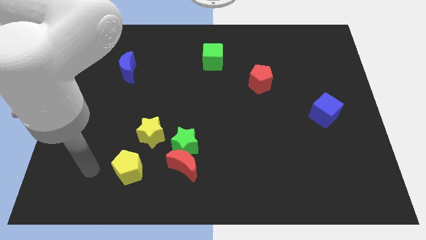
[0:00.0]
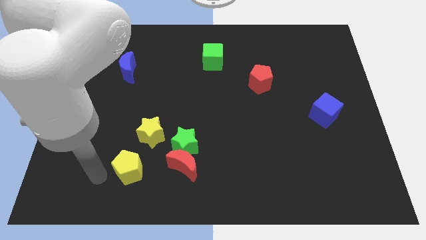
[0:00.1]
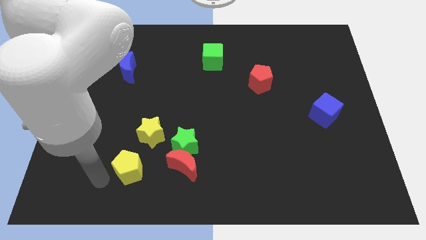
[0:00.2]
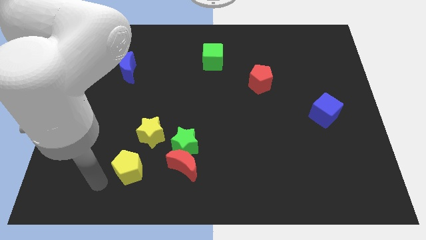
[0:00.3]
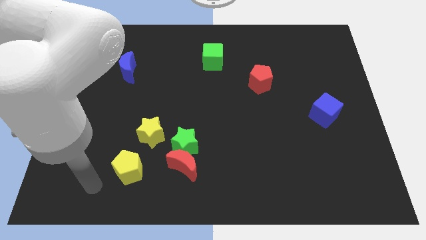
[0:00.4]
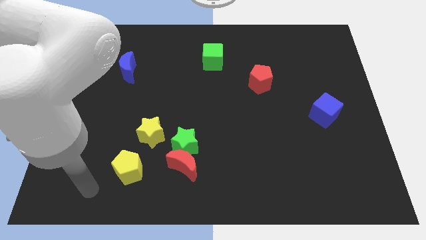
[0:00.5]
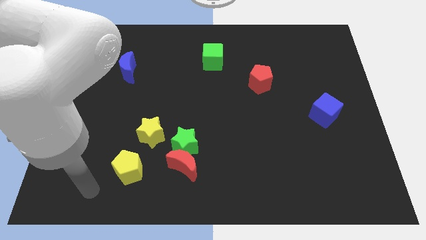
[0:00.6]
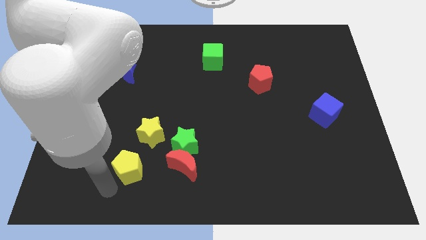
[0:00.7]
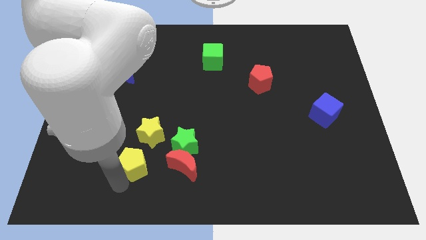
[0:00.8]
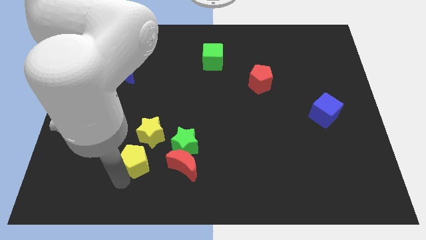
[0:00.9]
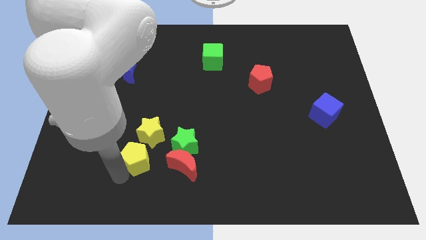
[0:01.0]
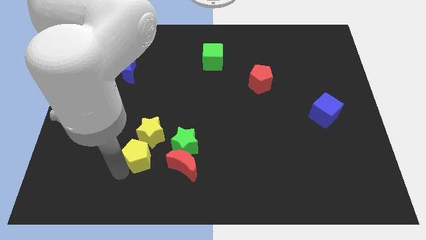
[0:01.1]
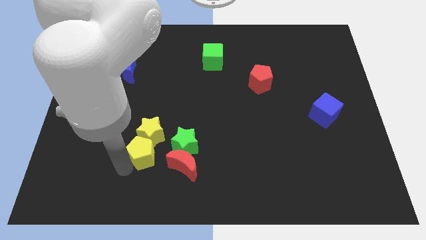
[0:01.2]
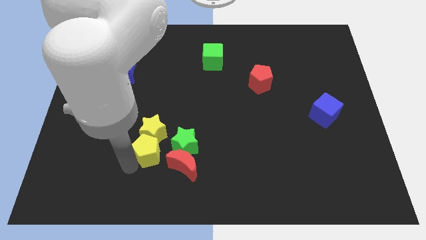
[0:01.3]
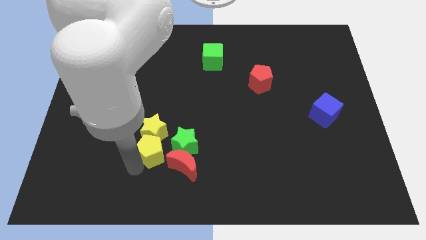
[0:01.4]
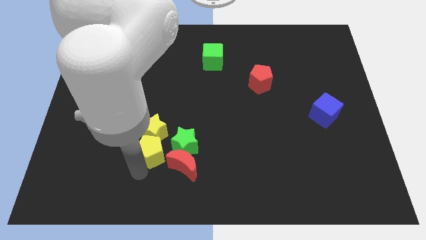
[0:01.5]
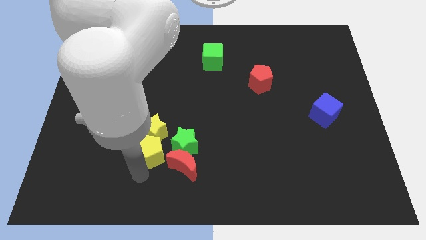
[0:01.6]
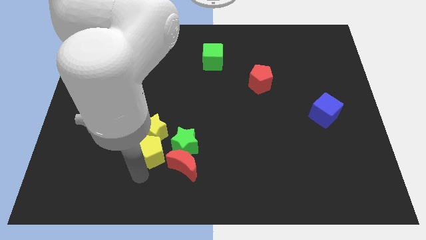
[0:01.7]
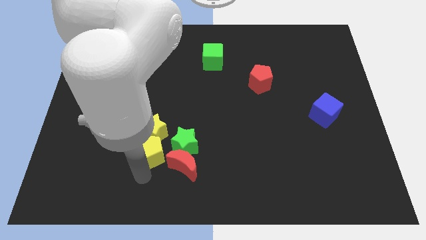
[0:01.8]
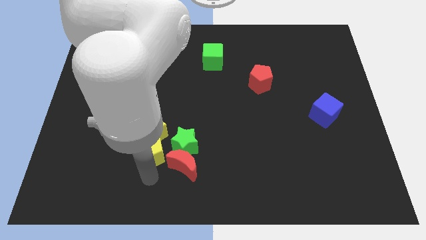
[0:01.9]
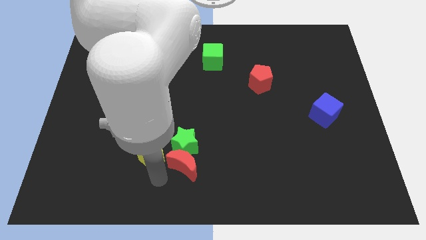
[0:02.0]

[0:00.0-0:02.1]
push yellow pentagon into yellow star

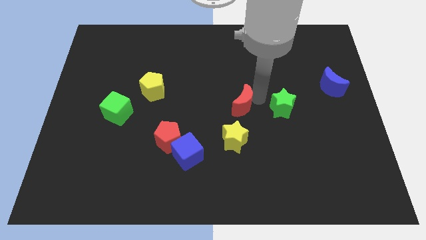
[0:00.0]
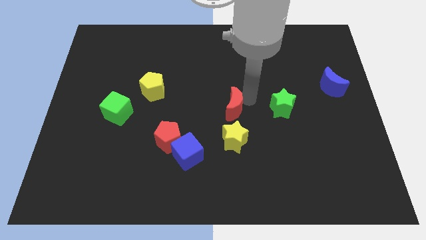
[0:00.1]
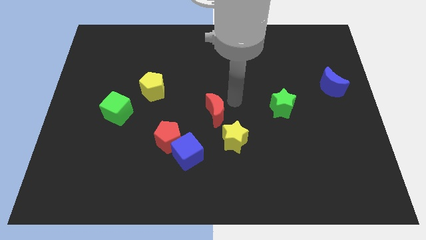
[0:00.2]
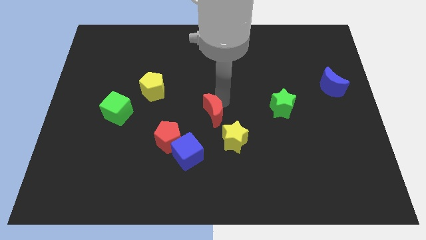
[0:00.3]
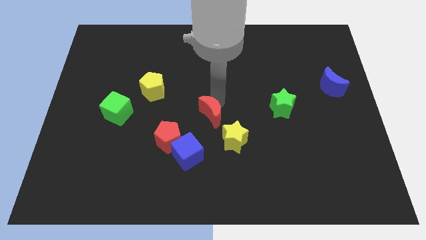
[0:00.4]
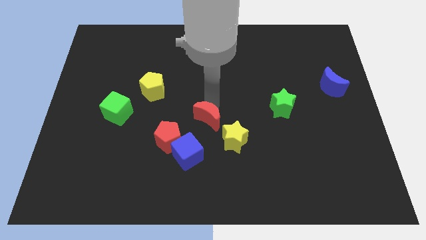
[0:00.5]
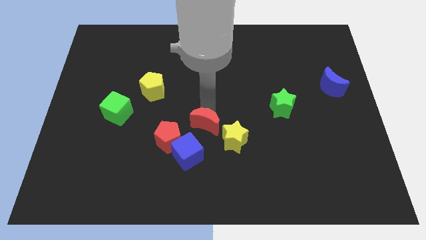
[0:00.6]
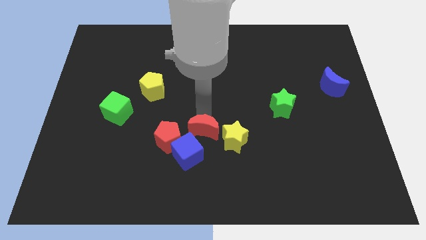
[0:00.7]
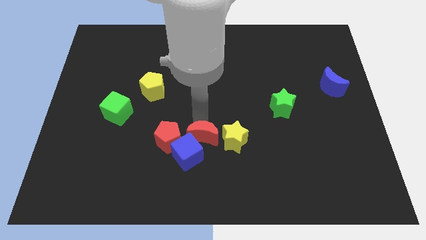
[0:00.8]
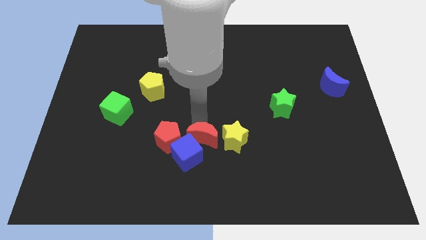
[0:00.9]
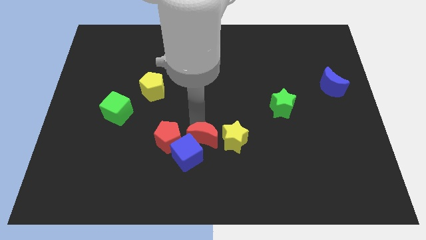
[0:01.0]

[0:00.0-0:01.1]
place the red crescent in between red pentagon and yellow star

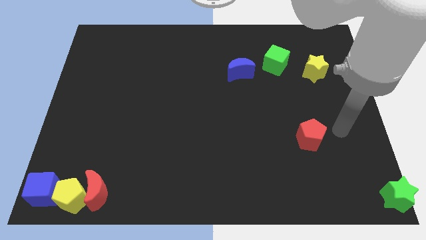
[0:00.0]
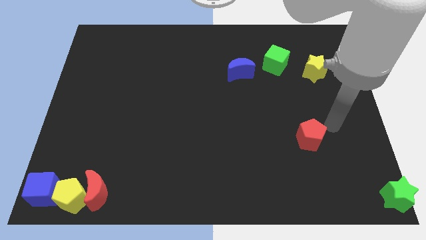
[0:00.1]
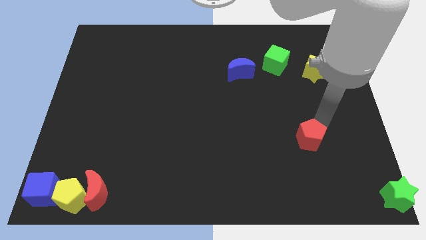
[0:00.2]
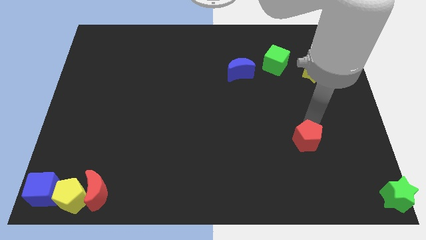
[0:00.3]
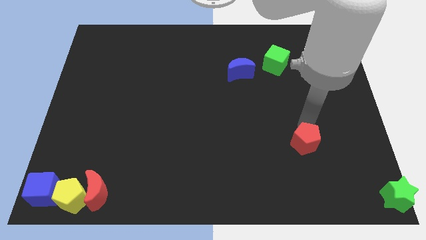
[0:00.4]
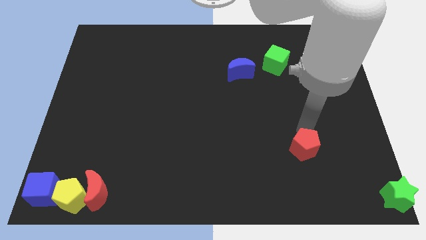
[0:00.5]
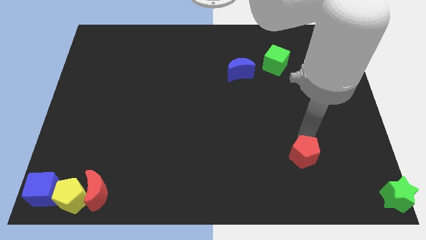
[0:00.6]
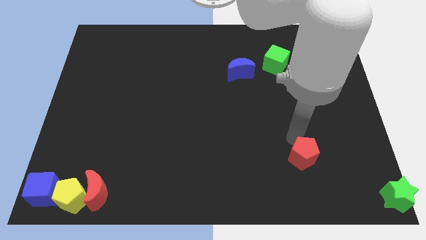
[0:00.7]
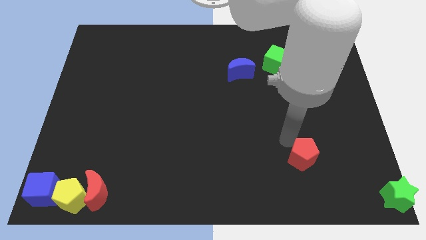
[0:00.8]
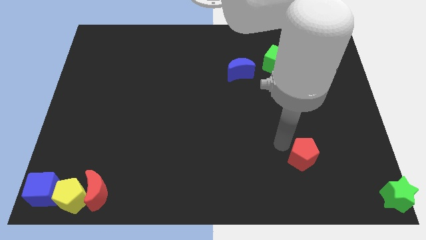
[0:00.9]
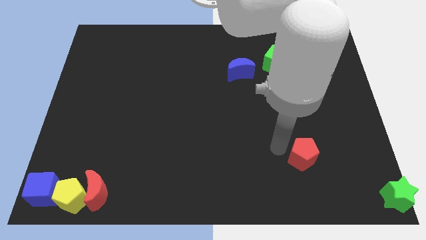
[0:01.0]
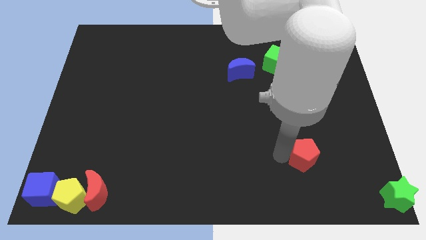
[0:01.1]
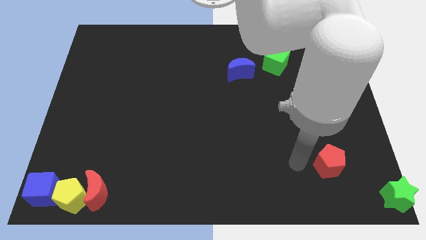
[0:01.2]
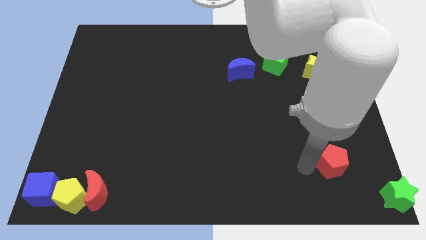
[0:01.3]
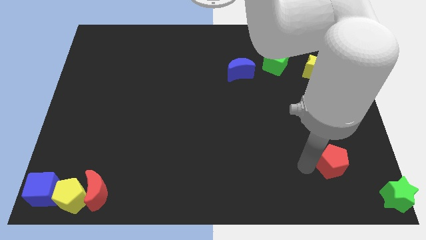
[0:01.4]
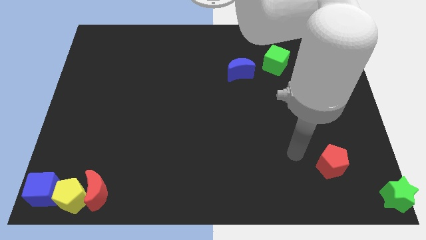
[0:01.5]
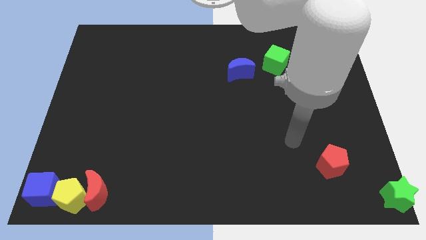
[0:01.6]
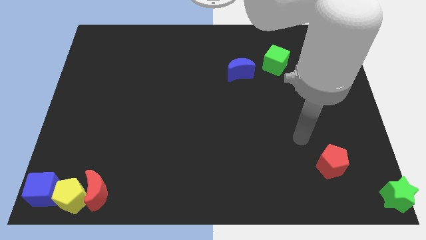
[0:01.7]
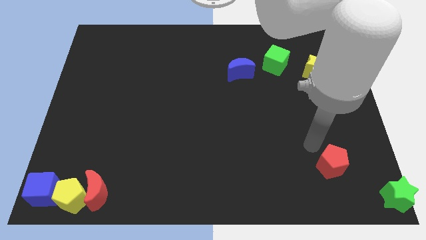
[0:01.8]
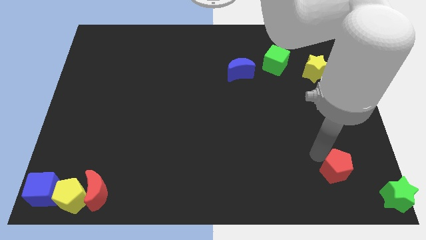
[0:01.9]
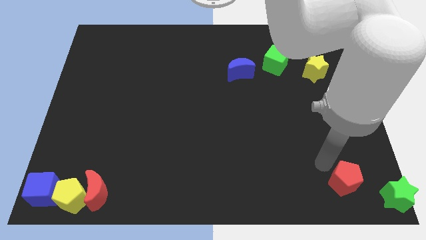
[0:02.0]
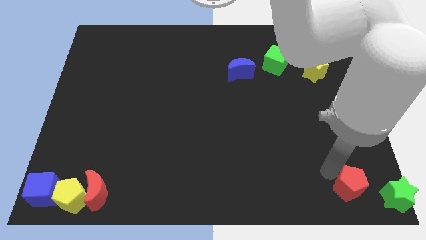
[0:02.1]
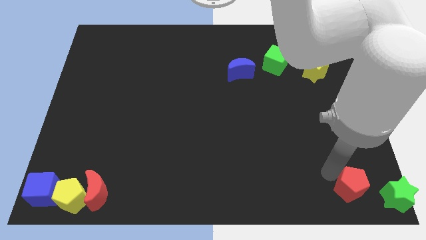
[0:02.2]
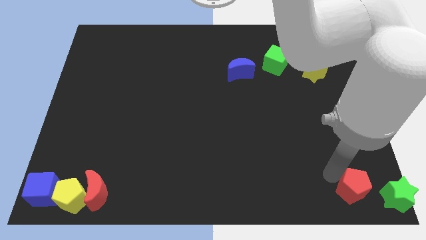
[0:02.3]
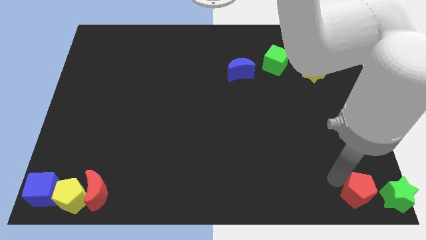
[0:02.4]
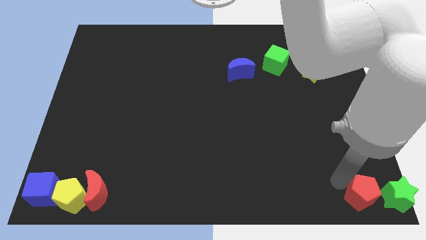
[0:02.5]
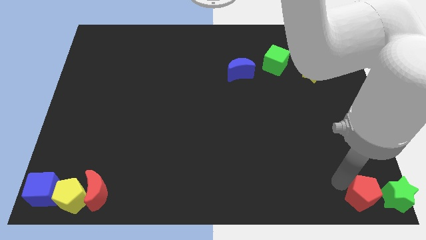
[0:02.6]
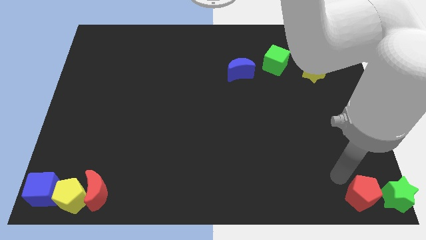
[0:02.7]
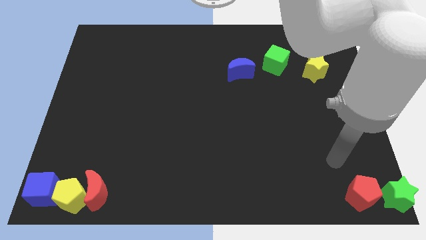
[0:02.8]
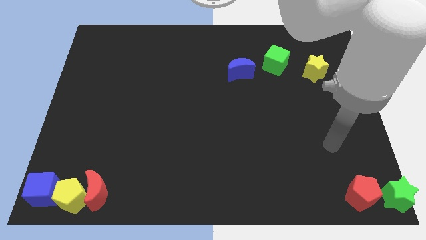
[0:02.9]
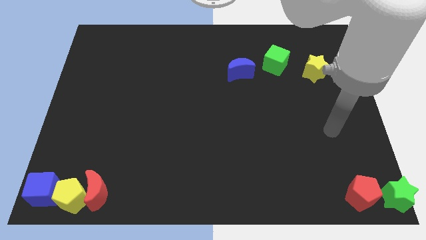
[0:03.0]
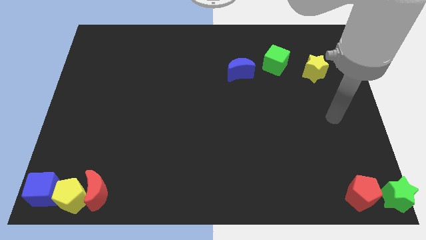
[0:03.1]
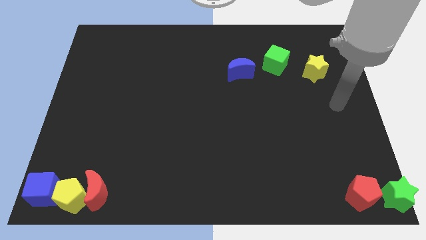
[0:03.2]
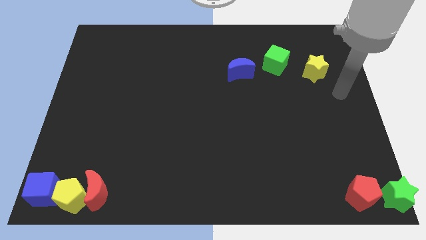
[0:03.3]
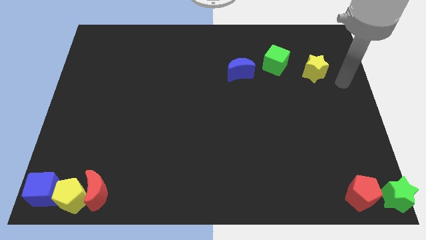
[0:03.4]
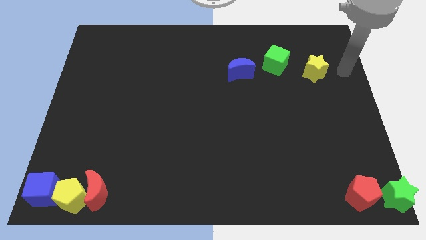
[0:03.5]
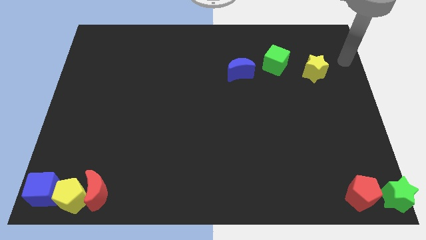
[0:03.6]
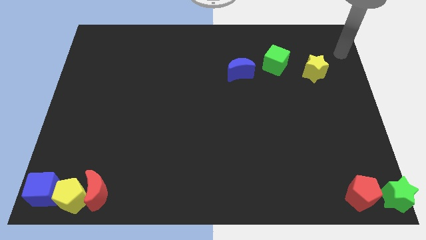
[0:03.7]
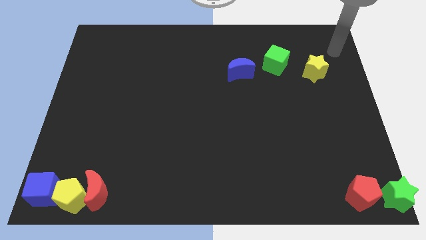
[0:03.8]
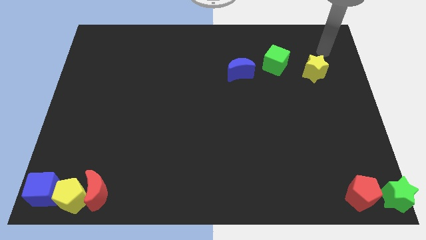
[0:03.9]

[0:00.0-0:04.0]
move red pentagon left beside the green star

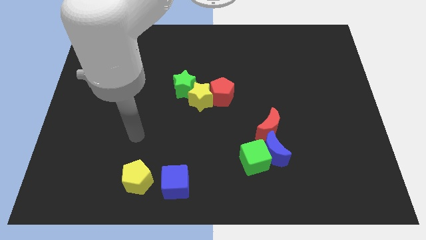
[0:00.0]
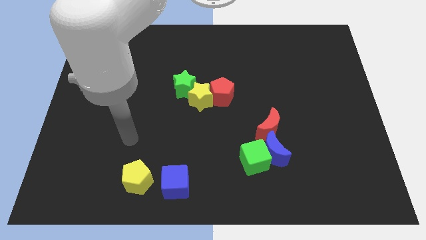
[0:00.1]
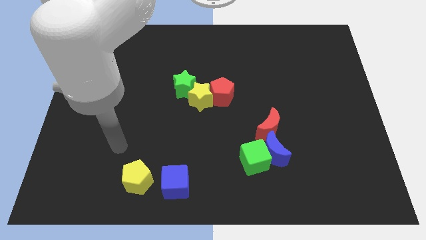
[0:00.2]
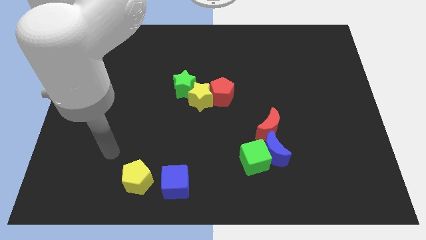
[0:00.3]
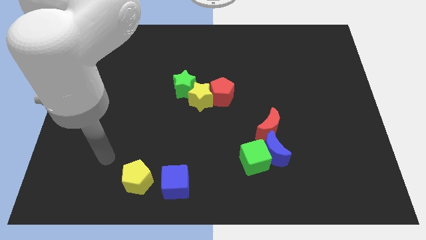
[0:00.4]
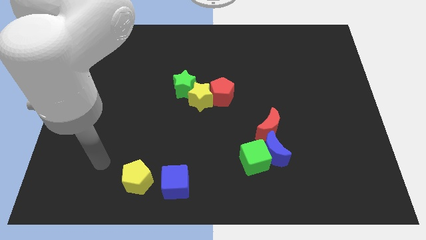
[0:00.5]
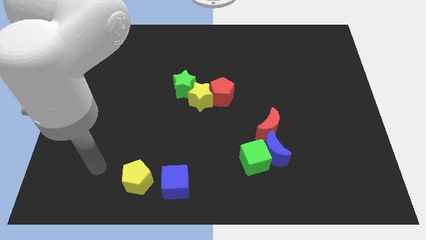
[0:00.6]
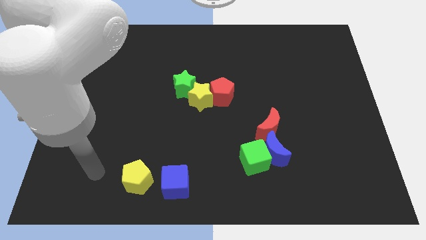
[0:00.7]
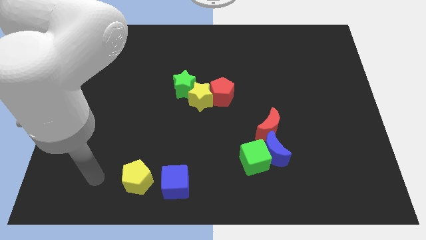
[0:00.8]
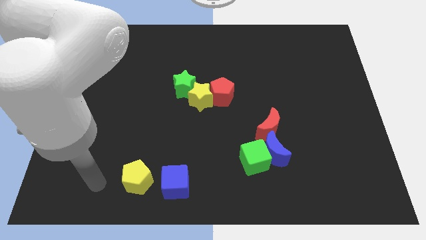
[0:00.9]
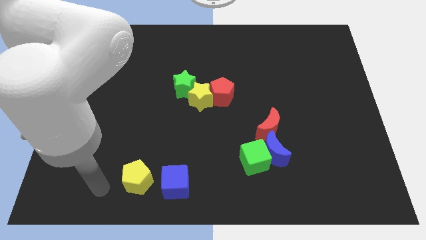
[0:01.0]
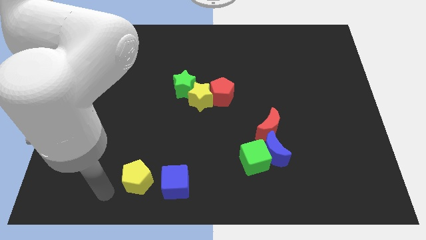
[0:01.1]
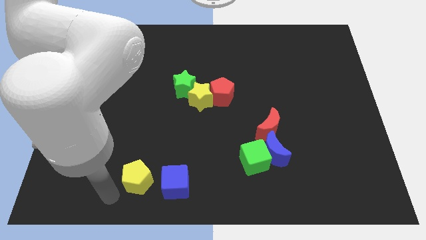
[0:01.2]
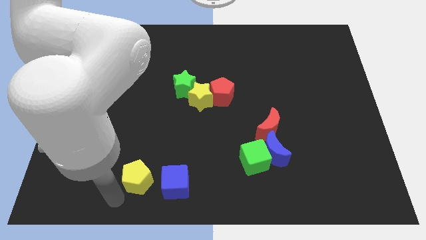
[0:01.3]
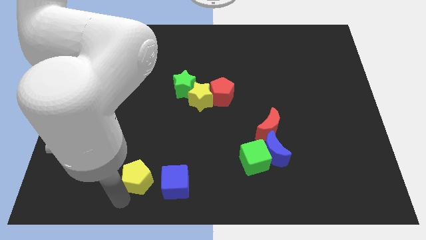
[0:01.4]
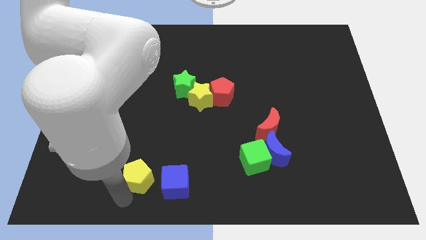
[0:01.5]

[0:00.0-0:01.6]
place the arm below the yellow pentagon

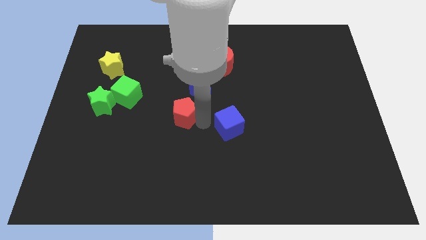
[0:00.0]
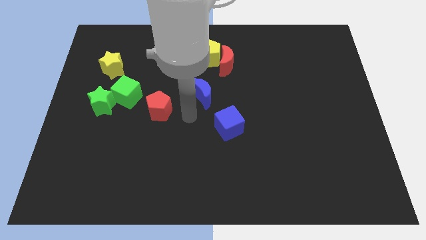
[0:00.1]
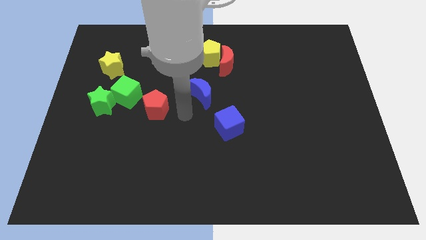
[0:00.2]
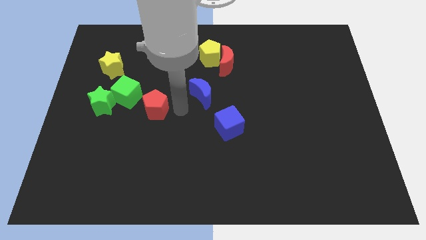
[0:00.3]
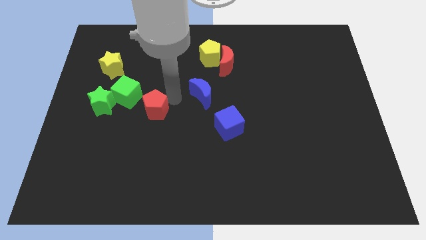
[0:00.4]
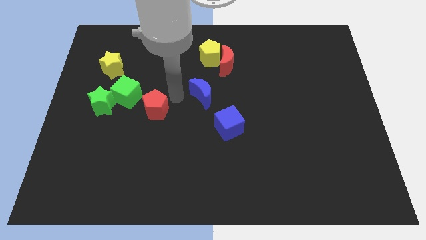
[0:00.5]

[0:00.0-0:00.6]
move the red pentagon to the right side of the green cube on the board
